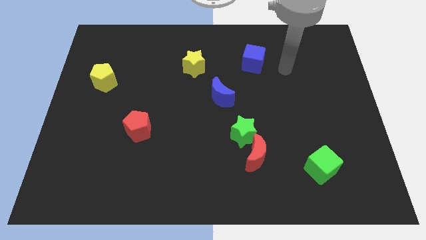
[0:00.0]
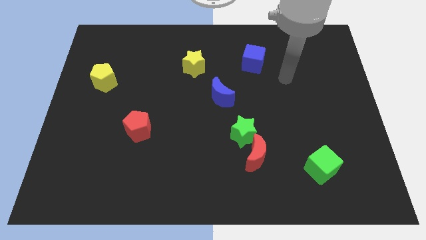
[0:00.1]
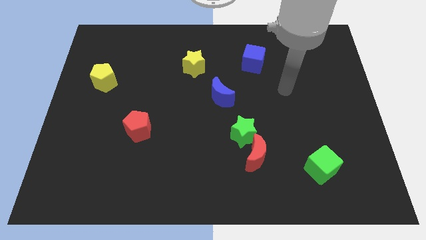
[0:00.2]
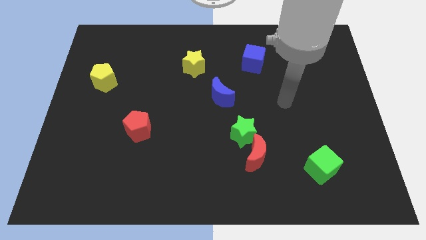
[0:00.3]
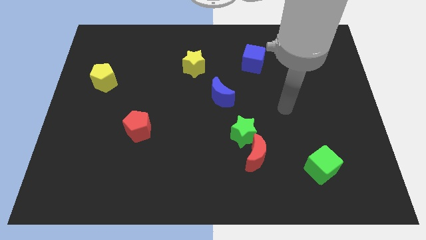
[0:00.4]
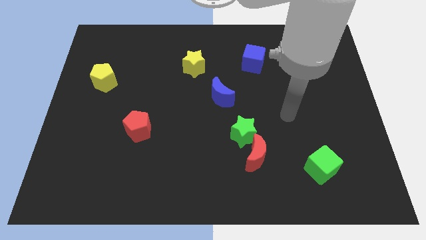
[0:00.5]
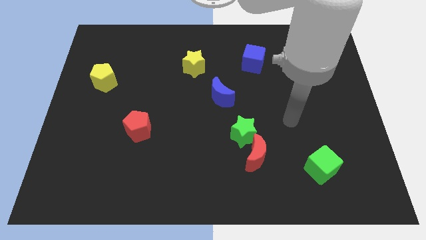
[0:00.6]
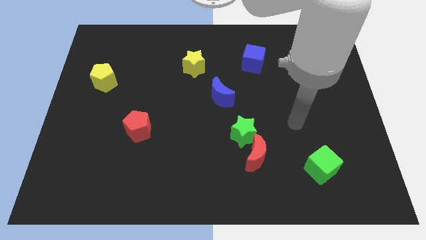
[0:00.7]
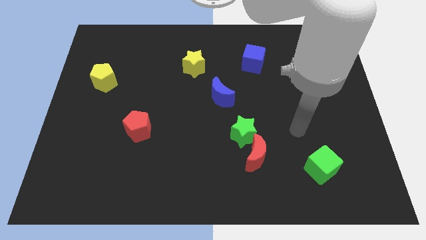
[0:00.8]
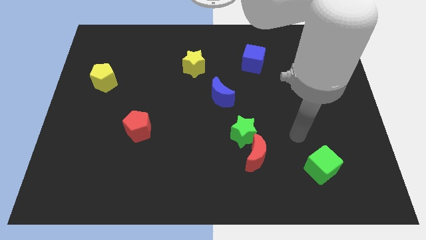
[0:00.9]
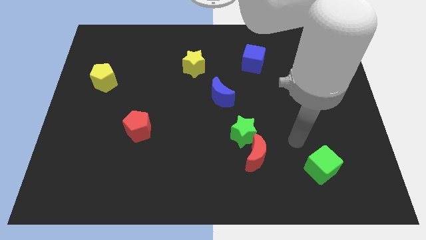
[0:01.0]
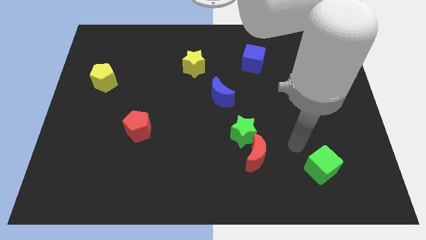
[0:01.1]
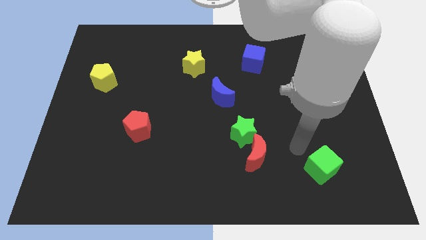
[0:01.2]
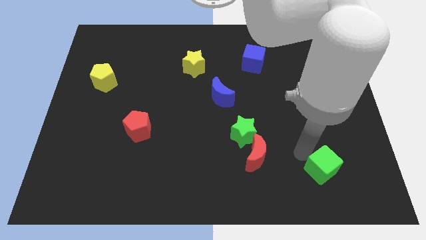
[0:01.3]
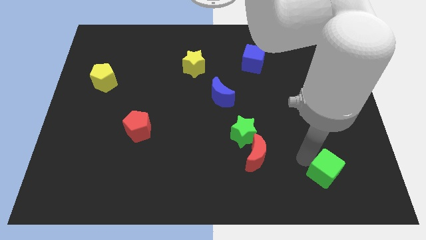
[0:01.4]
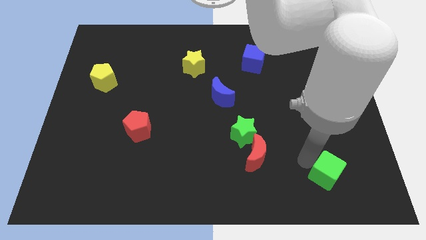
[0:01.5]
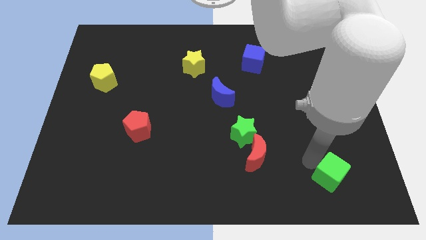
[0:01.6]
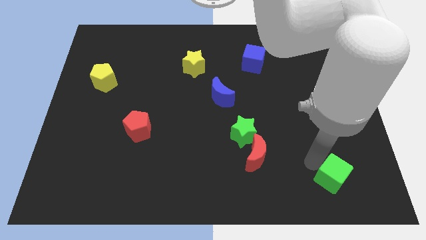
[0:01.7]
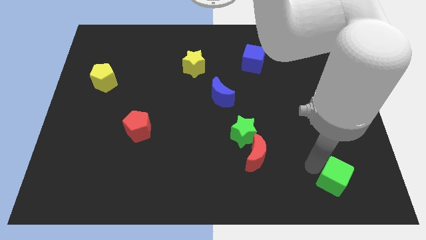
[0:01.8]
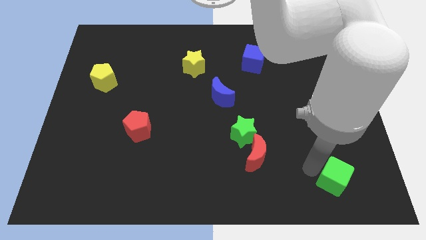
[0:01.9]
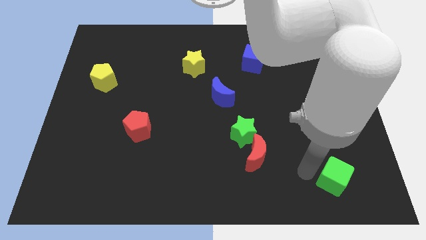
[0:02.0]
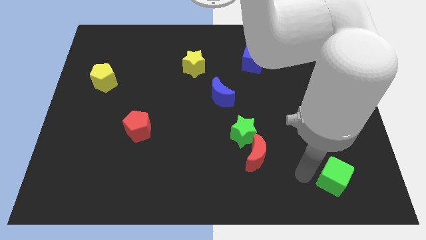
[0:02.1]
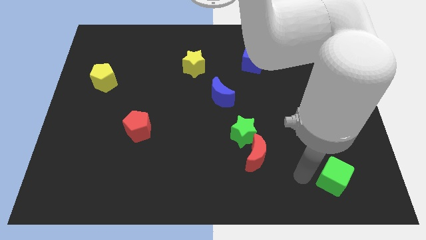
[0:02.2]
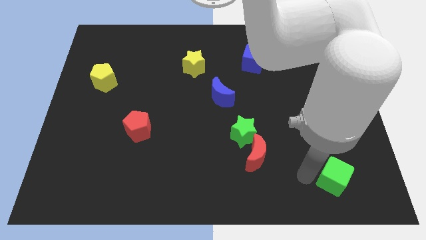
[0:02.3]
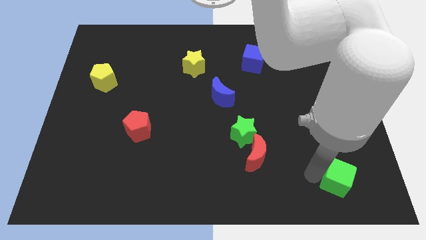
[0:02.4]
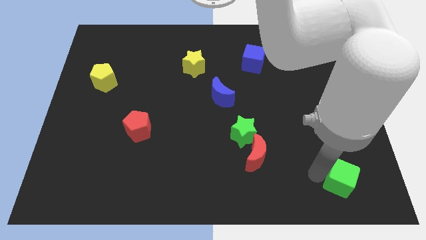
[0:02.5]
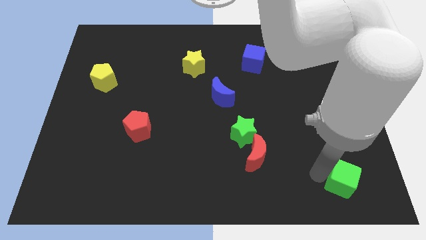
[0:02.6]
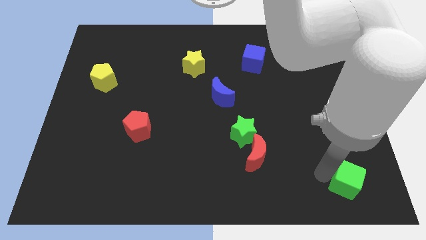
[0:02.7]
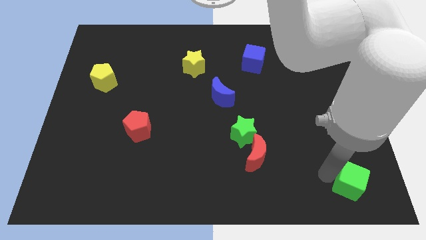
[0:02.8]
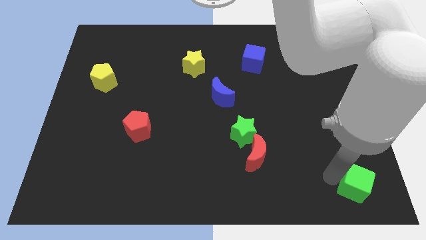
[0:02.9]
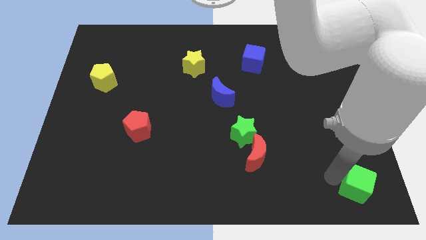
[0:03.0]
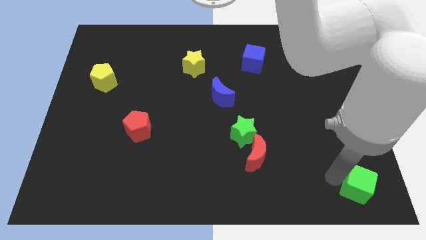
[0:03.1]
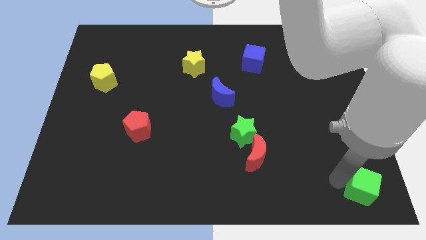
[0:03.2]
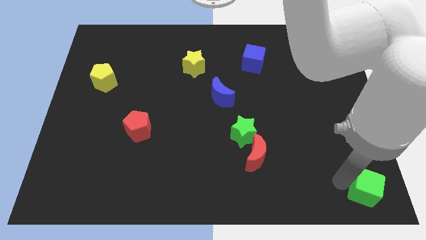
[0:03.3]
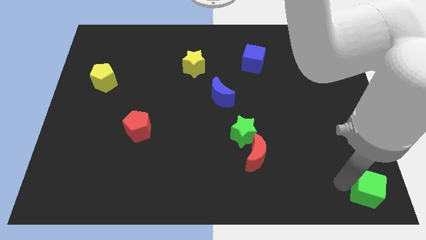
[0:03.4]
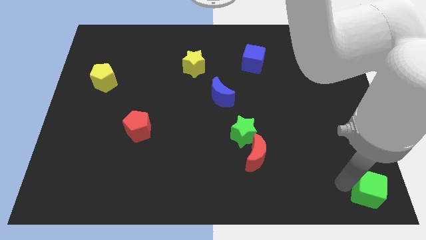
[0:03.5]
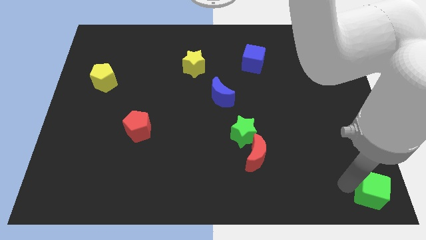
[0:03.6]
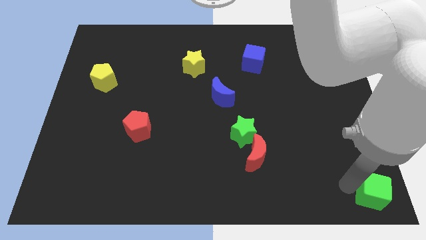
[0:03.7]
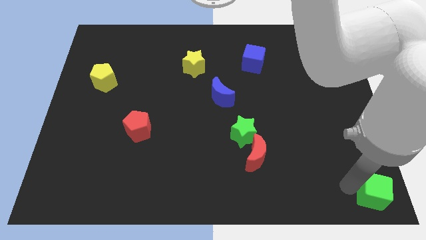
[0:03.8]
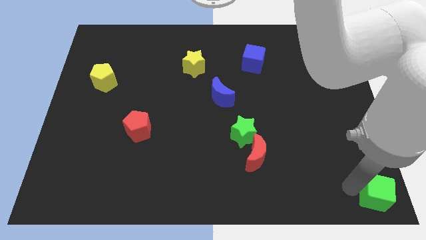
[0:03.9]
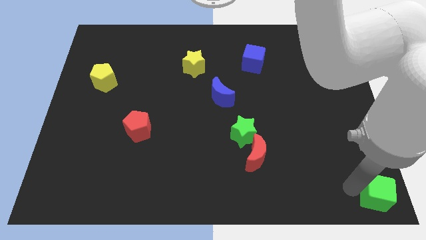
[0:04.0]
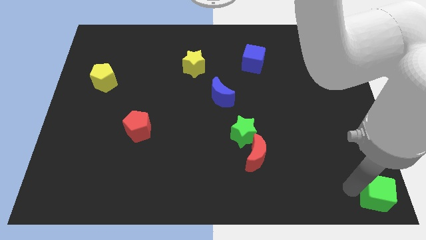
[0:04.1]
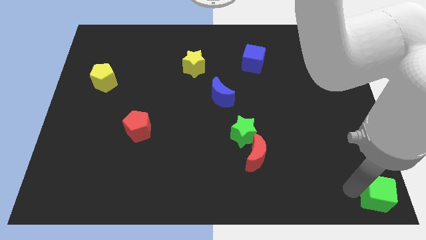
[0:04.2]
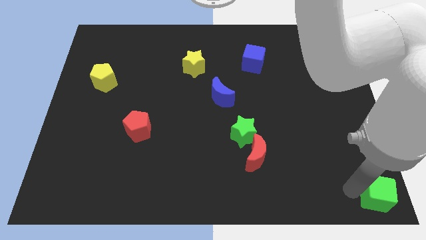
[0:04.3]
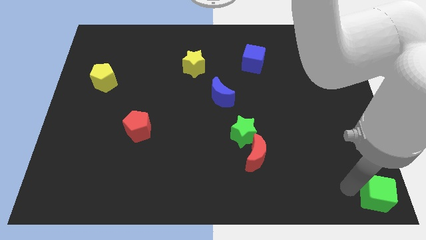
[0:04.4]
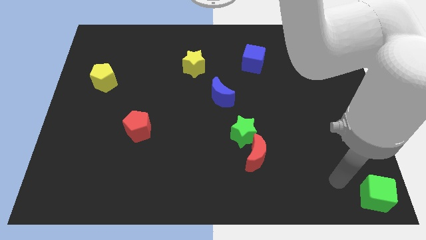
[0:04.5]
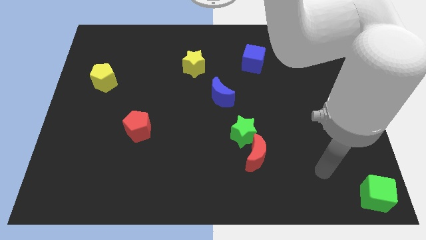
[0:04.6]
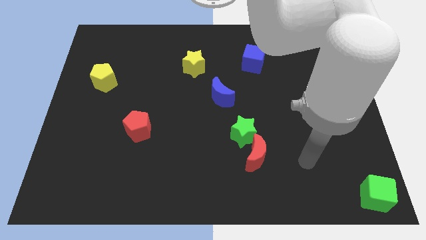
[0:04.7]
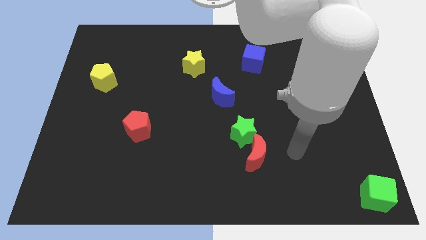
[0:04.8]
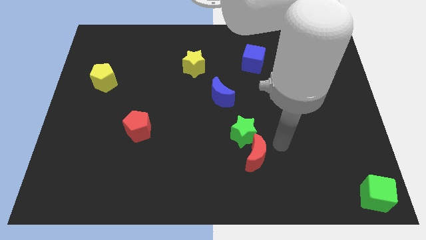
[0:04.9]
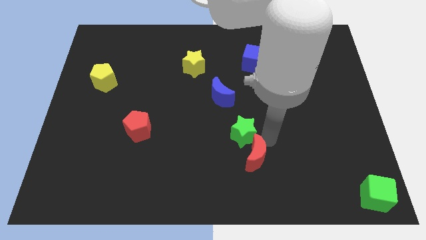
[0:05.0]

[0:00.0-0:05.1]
move the green cube to the bottom right corner

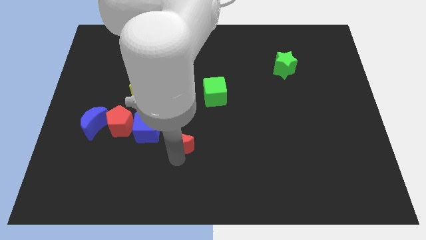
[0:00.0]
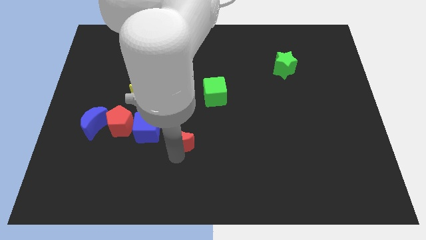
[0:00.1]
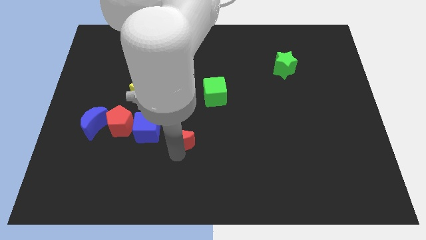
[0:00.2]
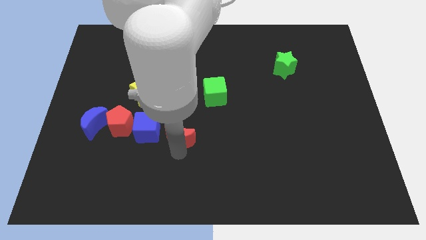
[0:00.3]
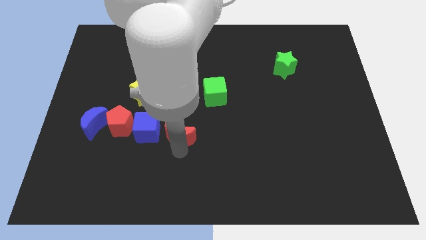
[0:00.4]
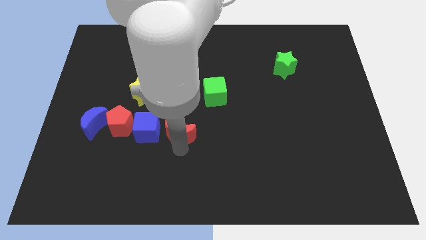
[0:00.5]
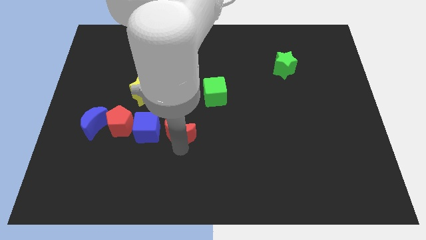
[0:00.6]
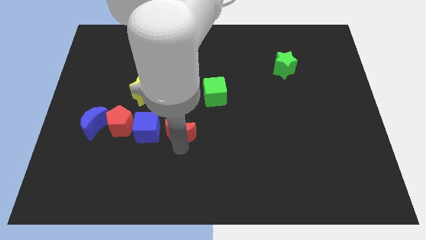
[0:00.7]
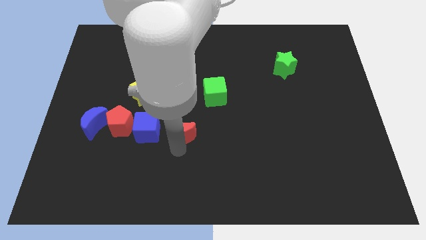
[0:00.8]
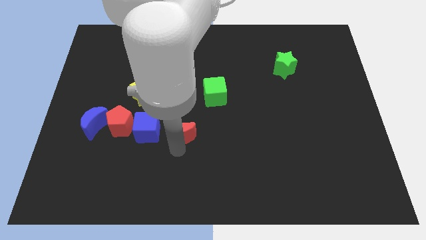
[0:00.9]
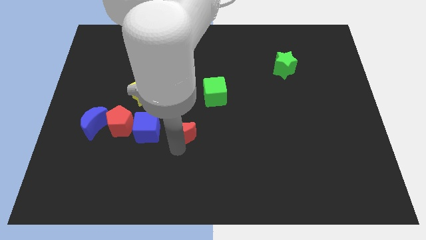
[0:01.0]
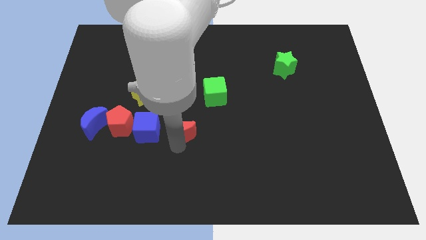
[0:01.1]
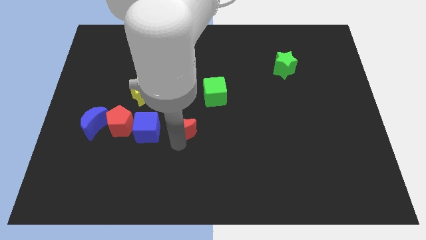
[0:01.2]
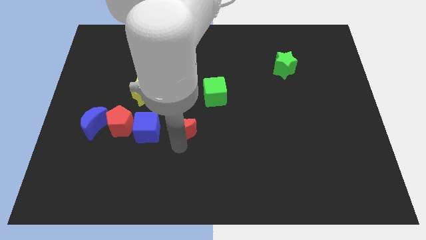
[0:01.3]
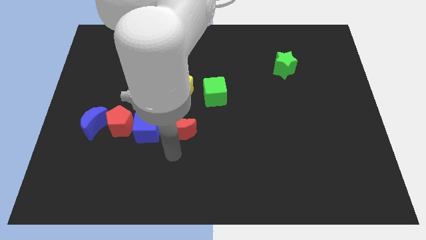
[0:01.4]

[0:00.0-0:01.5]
place the red moon close to the blue cube

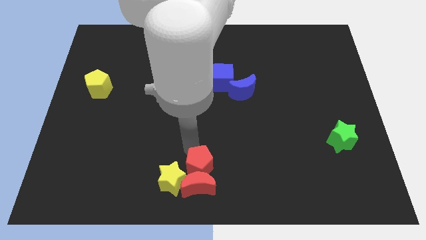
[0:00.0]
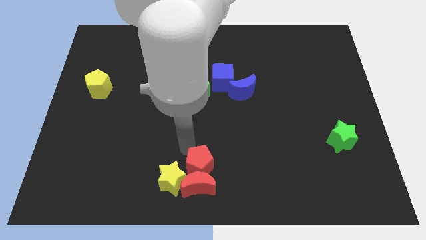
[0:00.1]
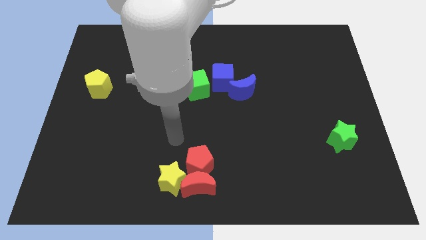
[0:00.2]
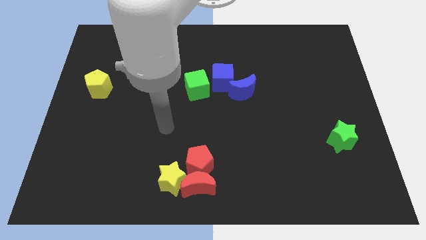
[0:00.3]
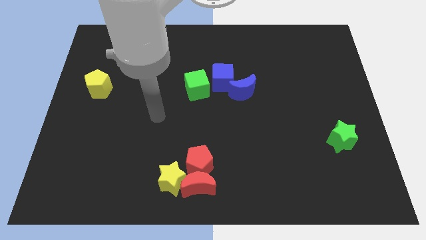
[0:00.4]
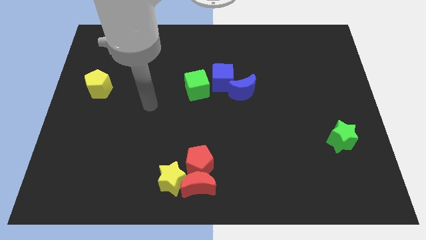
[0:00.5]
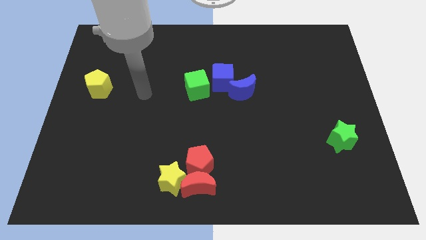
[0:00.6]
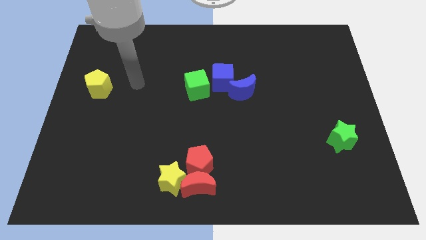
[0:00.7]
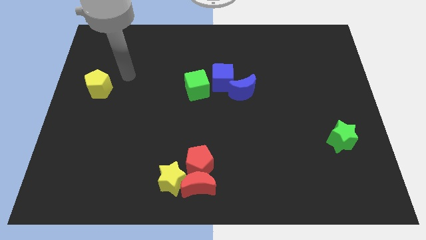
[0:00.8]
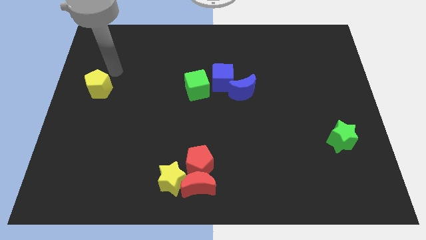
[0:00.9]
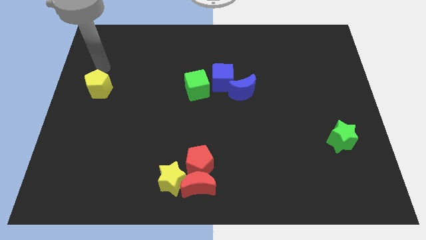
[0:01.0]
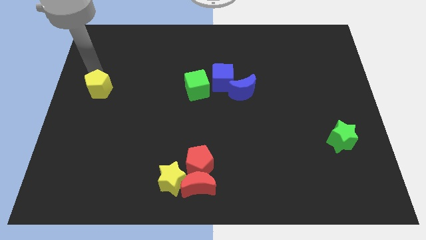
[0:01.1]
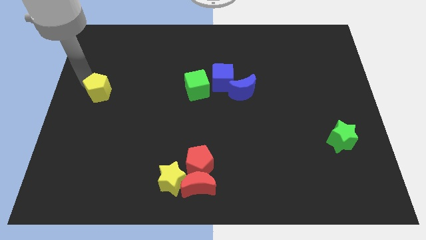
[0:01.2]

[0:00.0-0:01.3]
touch the top left side of the yellow pentagon

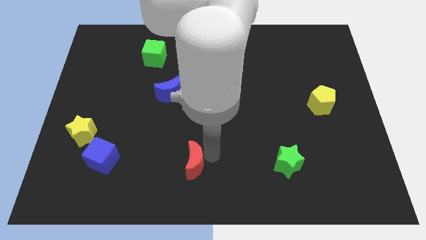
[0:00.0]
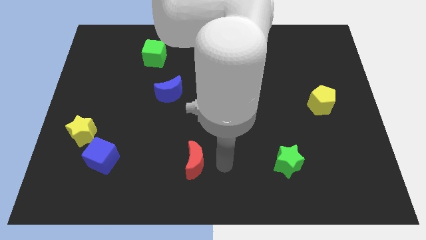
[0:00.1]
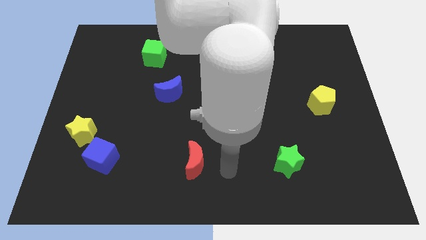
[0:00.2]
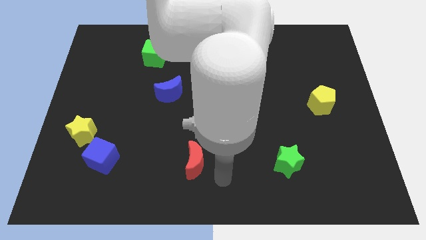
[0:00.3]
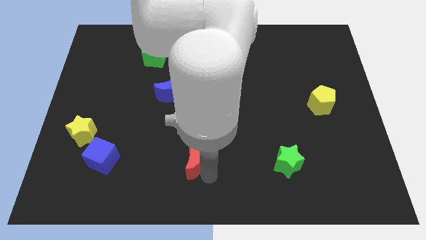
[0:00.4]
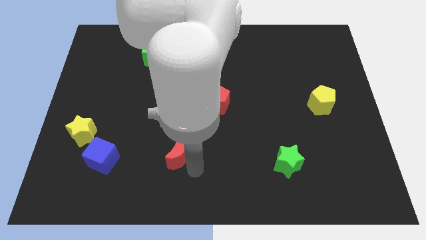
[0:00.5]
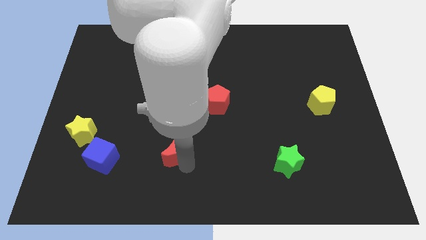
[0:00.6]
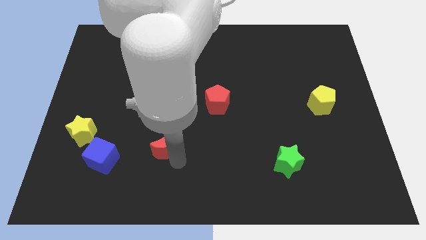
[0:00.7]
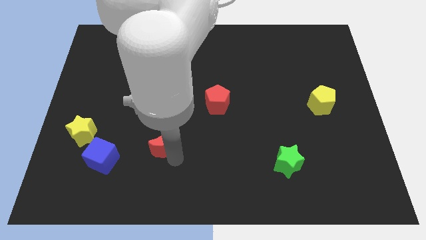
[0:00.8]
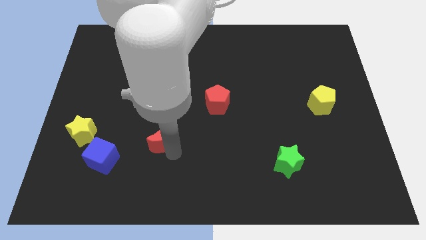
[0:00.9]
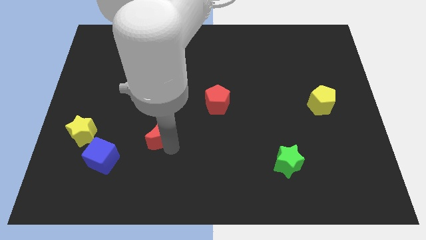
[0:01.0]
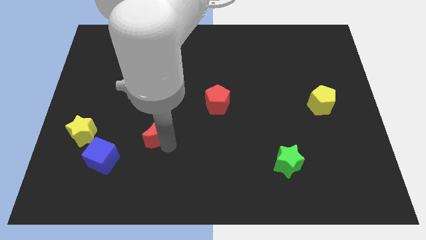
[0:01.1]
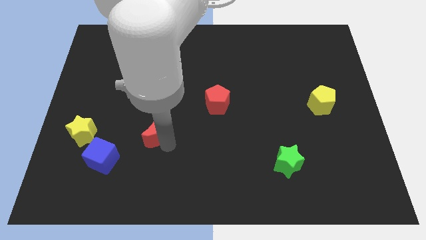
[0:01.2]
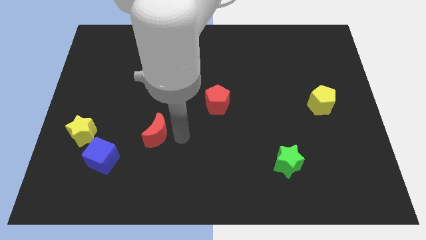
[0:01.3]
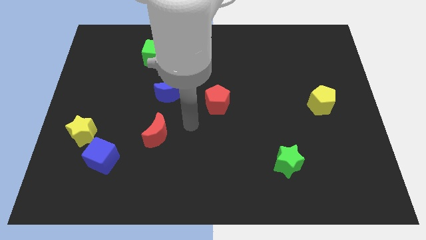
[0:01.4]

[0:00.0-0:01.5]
slide the red crescent to the bottom of the blue moon
